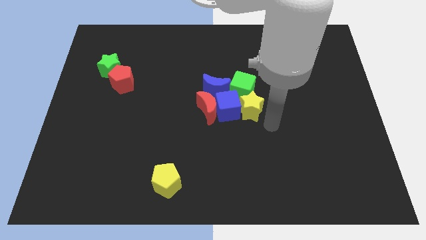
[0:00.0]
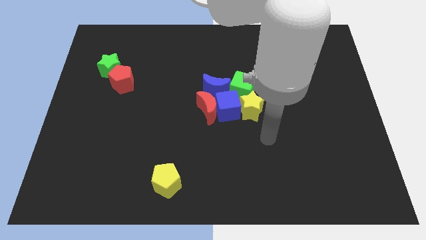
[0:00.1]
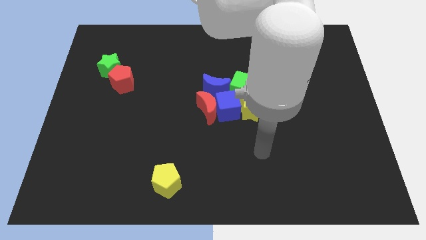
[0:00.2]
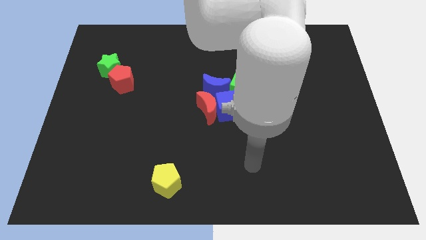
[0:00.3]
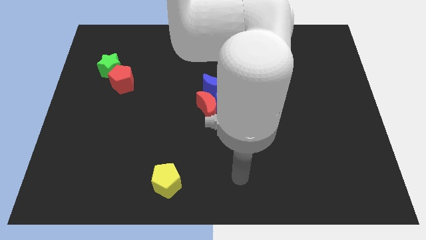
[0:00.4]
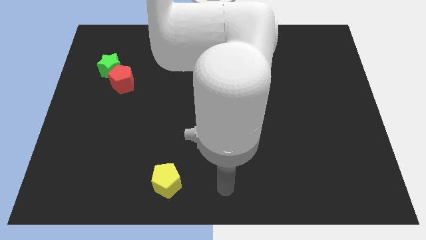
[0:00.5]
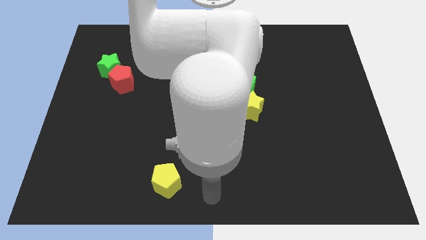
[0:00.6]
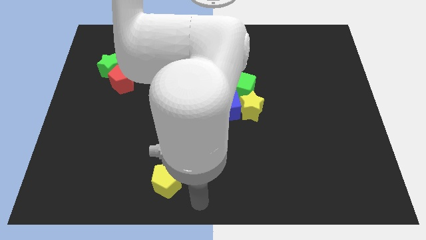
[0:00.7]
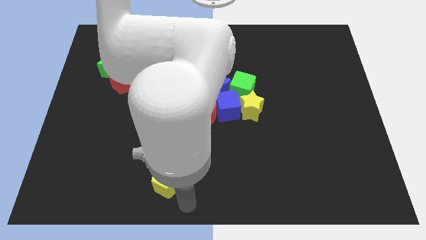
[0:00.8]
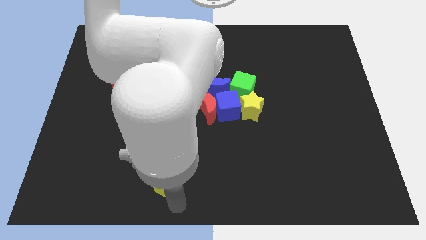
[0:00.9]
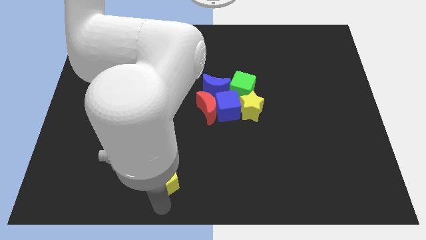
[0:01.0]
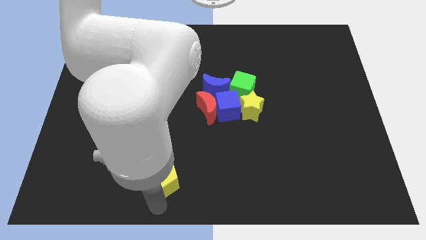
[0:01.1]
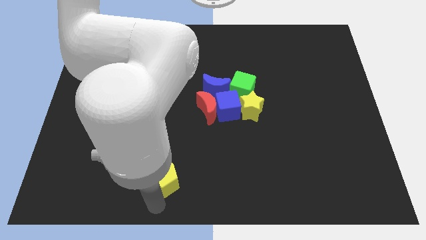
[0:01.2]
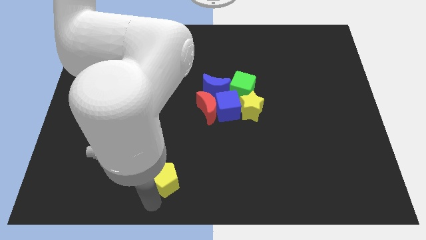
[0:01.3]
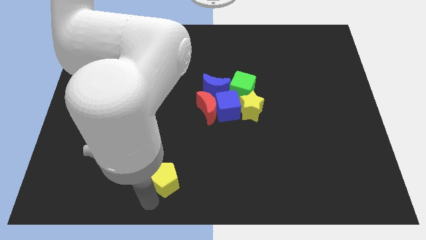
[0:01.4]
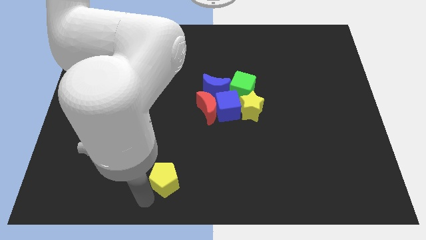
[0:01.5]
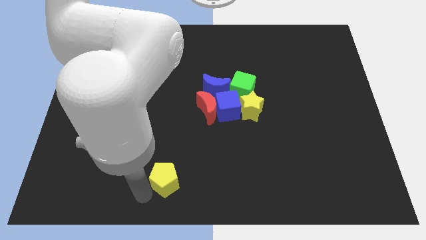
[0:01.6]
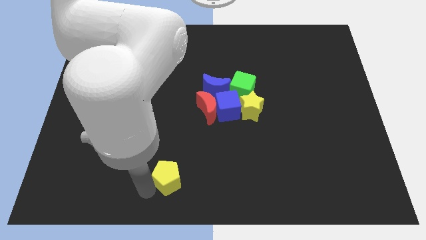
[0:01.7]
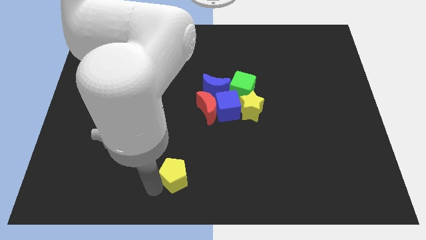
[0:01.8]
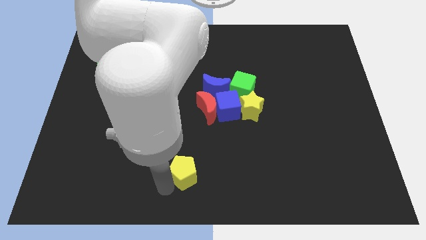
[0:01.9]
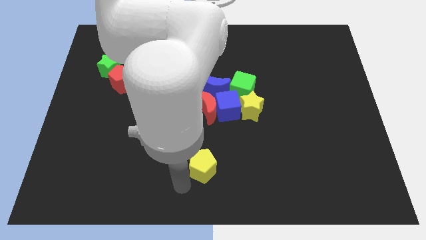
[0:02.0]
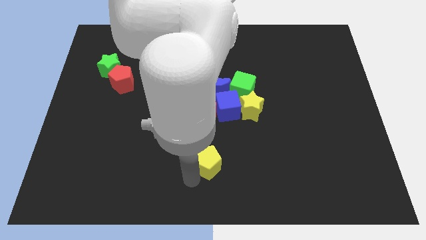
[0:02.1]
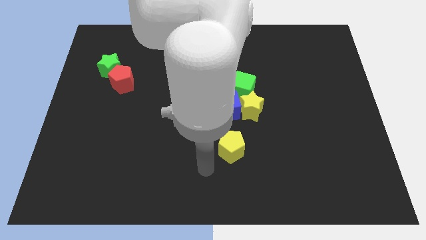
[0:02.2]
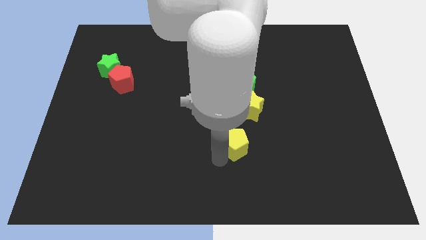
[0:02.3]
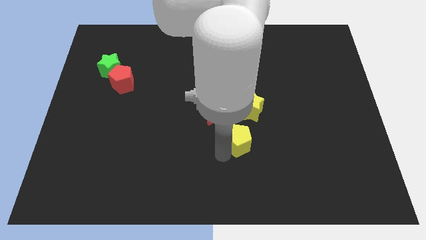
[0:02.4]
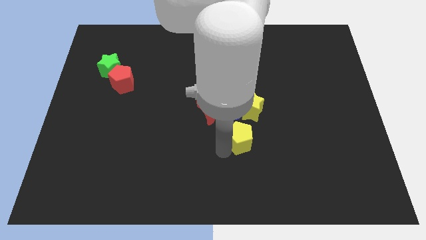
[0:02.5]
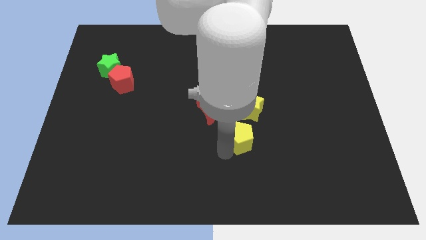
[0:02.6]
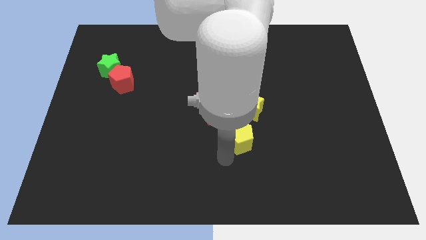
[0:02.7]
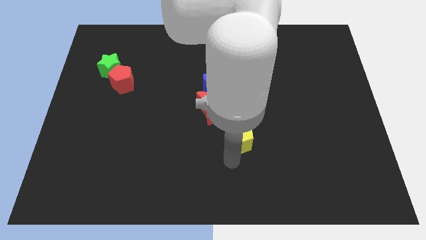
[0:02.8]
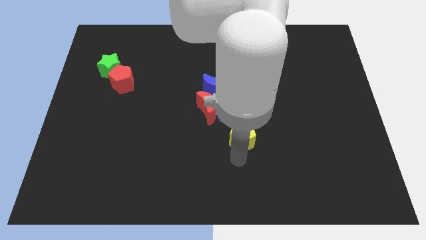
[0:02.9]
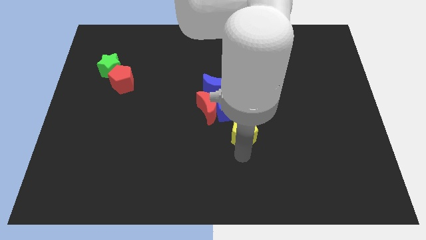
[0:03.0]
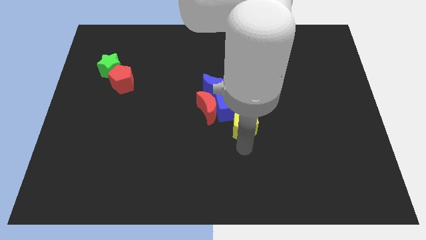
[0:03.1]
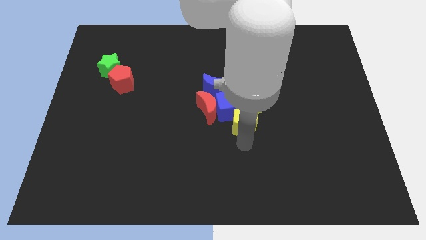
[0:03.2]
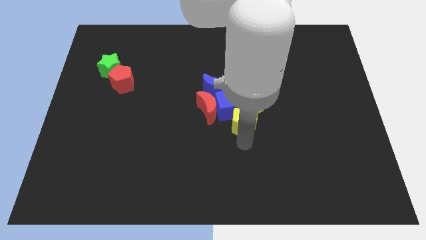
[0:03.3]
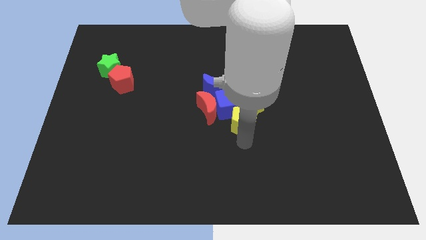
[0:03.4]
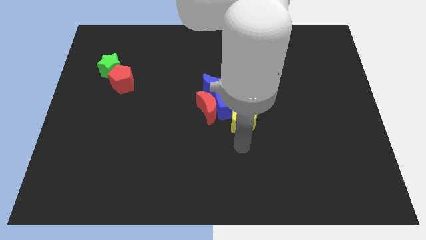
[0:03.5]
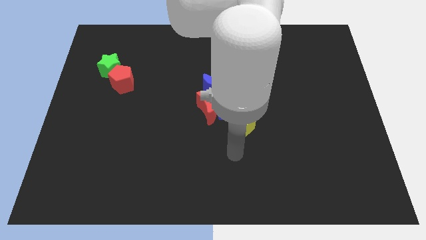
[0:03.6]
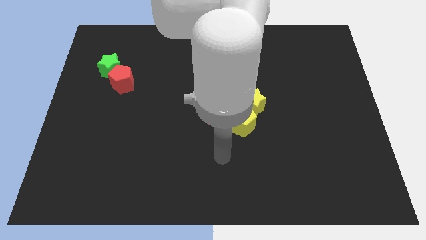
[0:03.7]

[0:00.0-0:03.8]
push the yellow pentagon into the blue cube

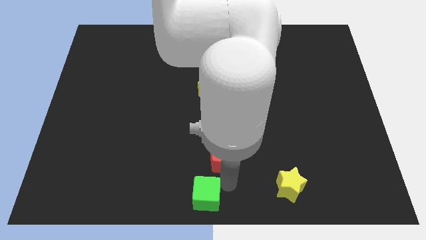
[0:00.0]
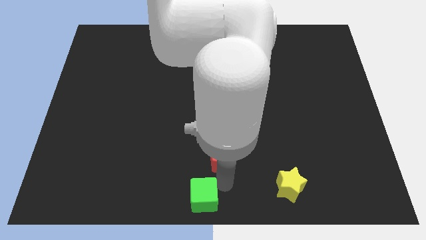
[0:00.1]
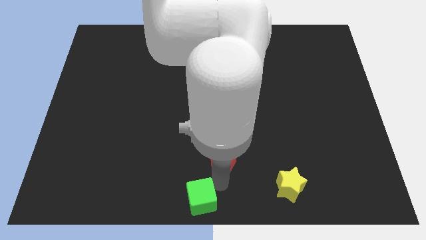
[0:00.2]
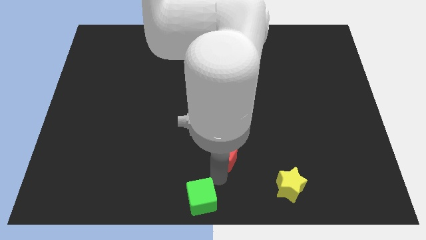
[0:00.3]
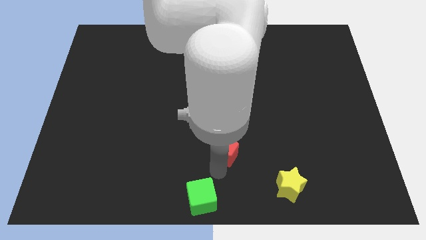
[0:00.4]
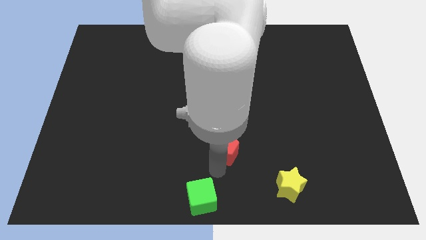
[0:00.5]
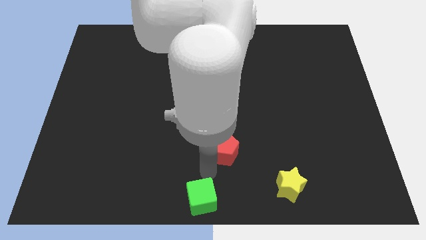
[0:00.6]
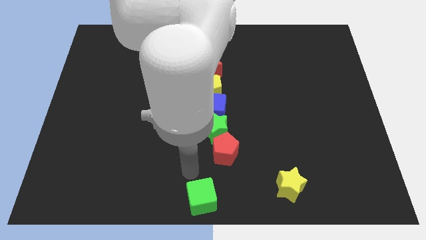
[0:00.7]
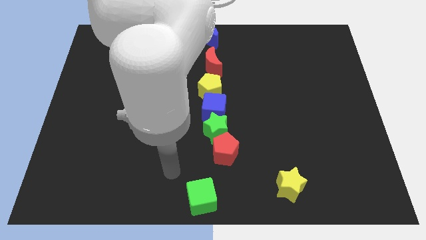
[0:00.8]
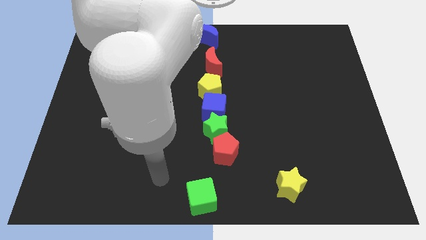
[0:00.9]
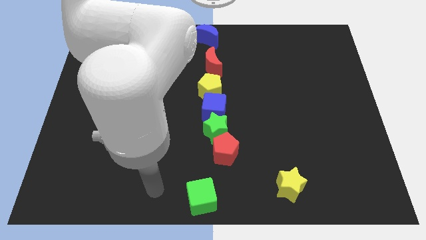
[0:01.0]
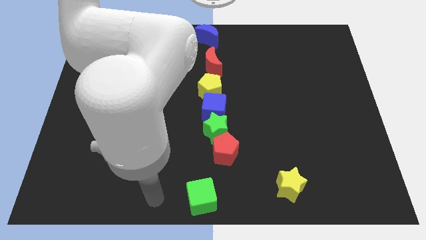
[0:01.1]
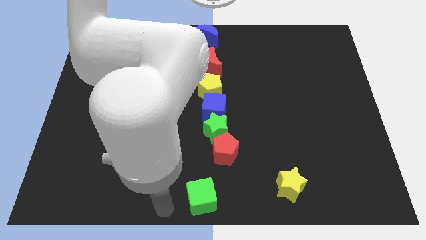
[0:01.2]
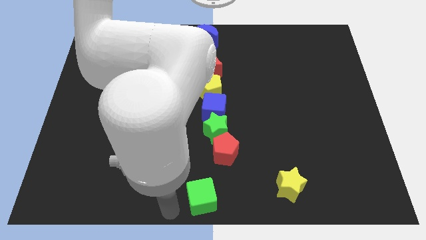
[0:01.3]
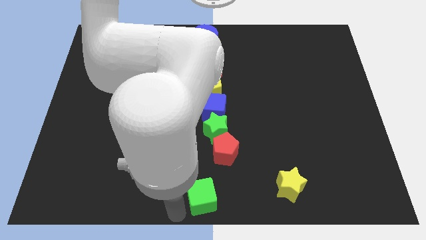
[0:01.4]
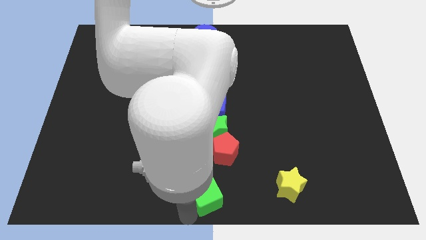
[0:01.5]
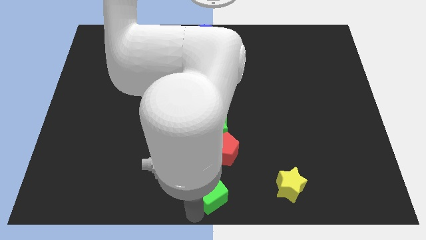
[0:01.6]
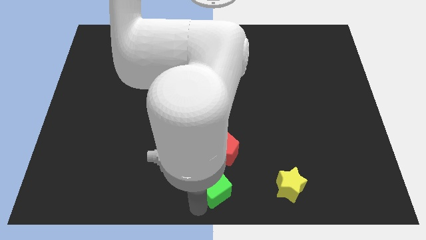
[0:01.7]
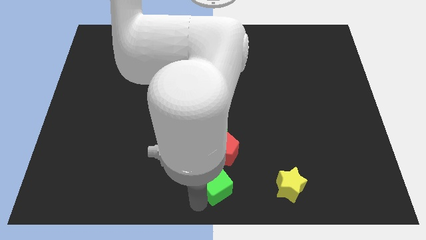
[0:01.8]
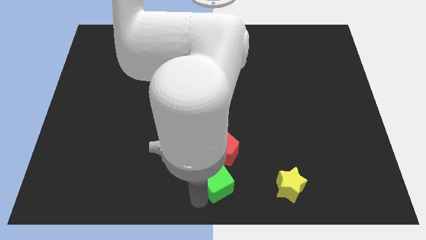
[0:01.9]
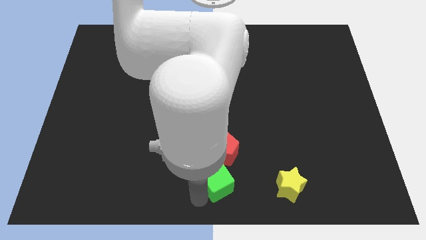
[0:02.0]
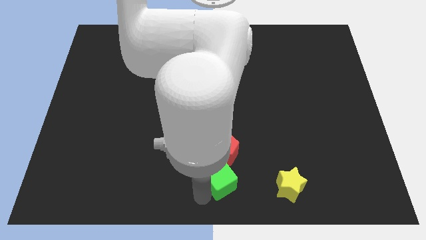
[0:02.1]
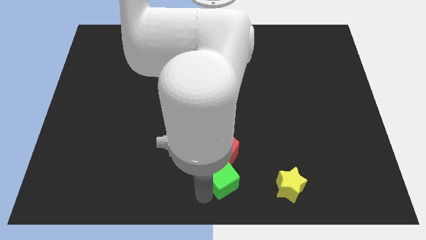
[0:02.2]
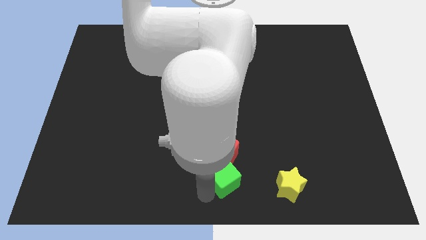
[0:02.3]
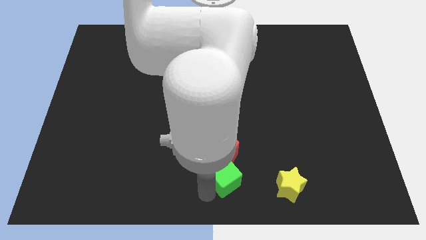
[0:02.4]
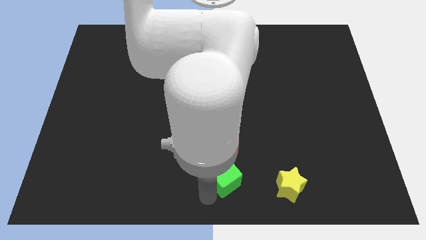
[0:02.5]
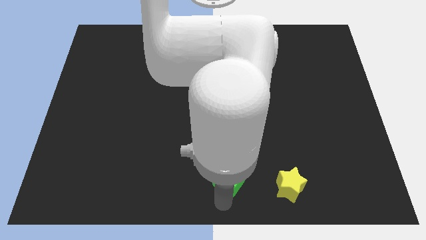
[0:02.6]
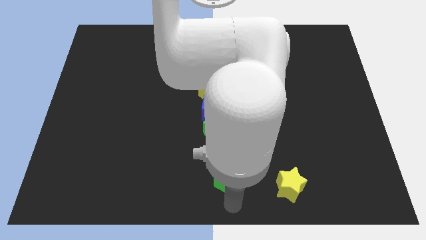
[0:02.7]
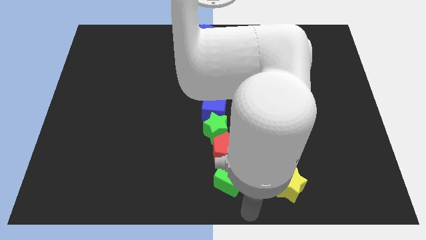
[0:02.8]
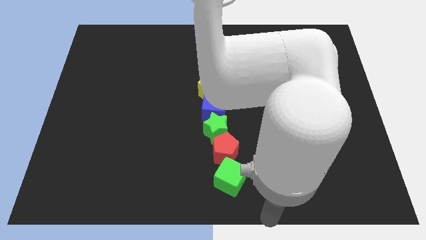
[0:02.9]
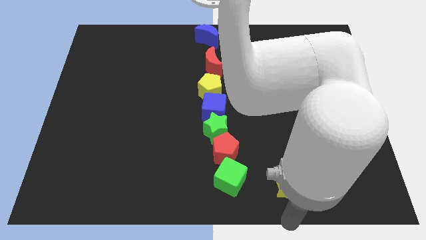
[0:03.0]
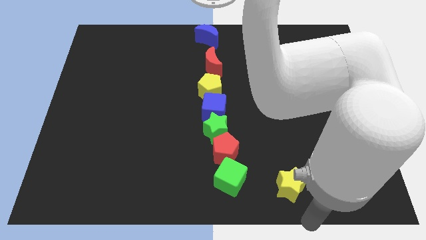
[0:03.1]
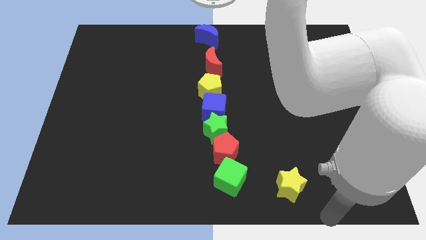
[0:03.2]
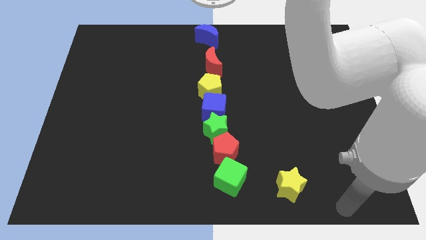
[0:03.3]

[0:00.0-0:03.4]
place the green cube to the bottom of red pentagon

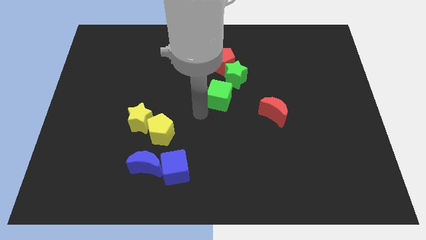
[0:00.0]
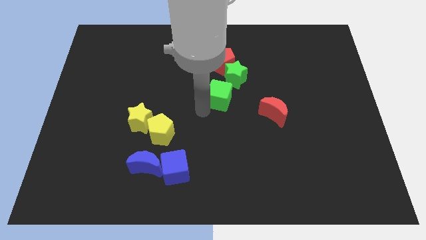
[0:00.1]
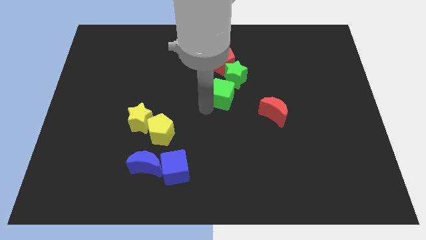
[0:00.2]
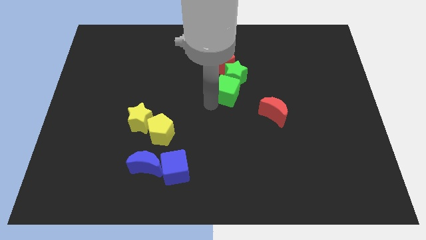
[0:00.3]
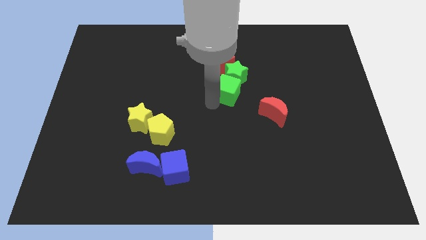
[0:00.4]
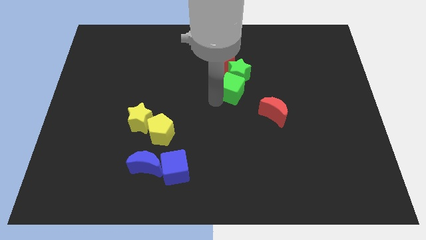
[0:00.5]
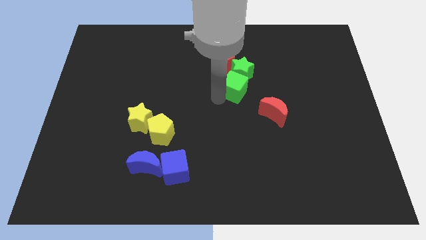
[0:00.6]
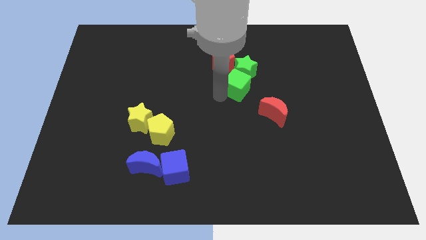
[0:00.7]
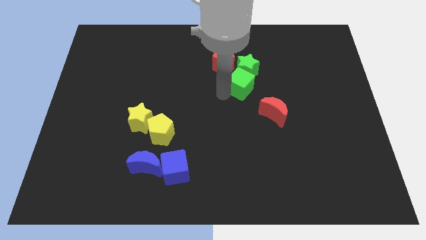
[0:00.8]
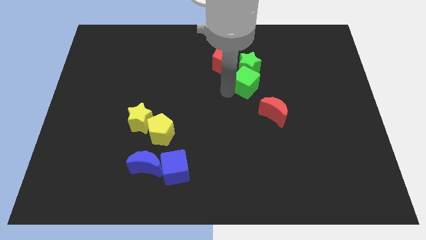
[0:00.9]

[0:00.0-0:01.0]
push green cube into green star

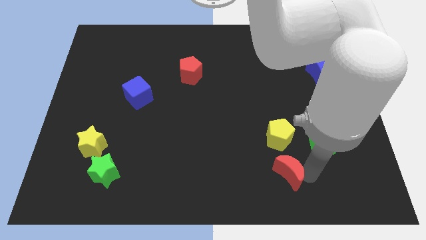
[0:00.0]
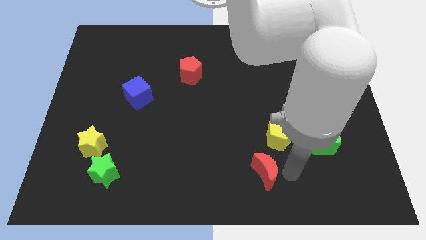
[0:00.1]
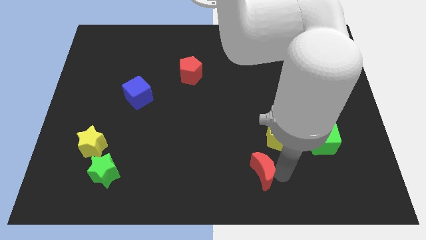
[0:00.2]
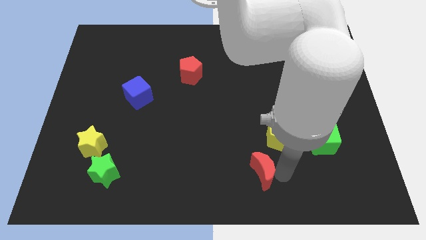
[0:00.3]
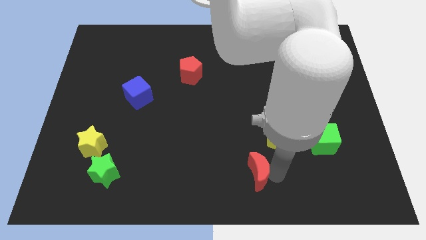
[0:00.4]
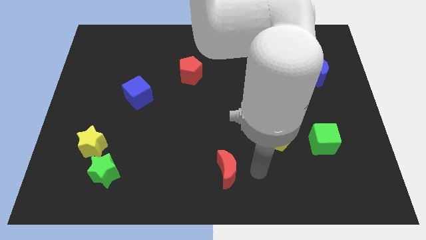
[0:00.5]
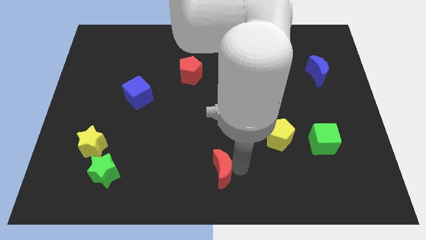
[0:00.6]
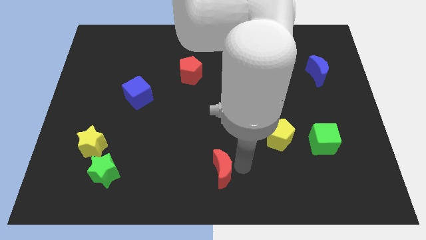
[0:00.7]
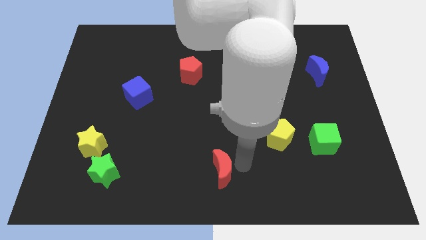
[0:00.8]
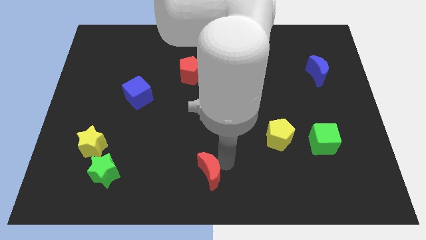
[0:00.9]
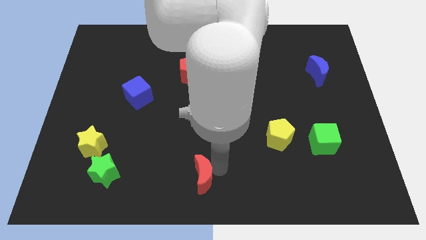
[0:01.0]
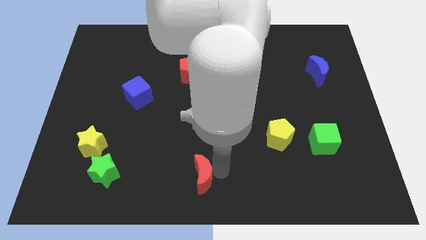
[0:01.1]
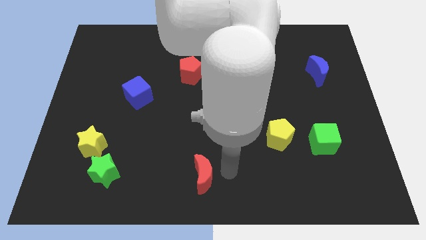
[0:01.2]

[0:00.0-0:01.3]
move the red crescent slightly to the left
